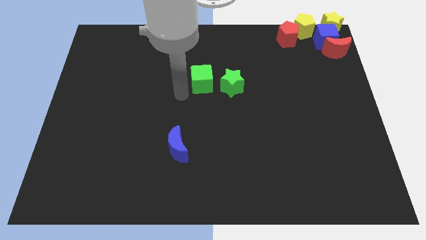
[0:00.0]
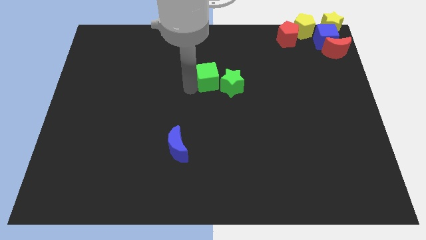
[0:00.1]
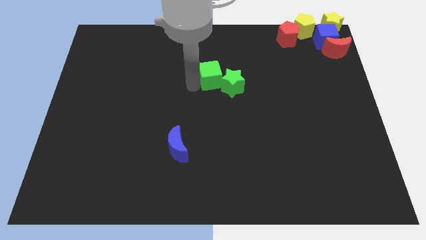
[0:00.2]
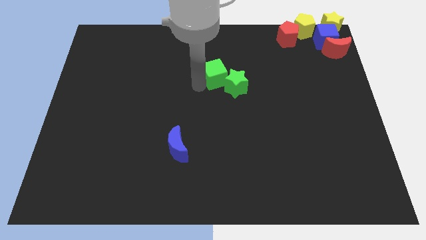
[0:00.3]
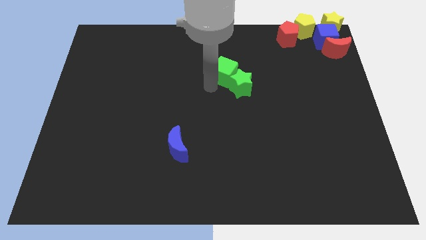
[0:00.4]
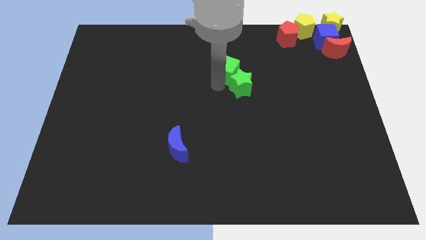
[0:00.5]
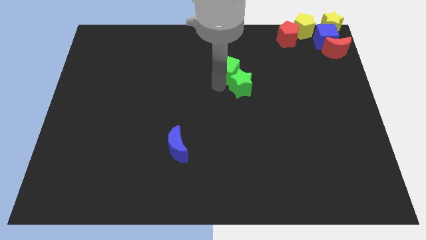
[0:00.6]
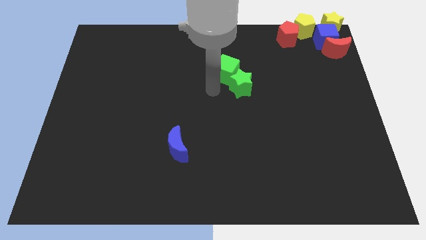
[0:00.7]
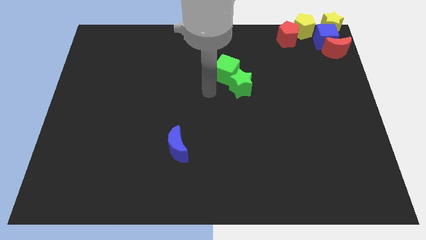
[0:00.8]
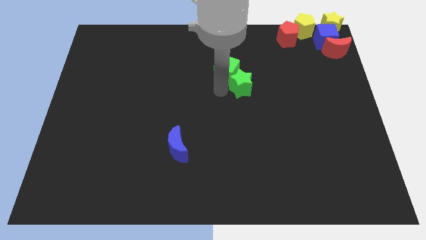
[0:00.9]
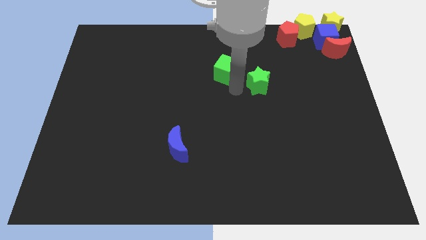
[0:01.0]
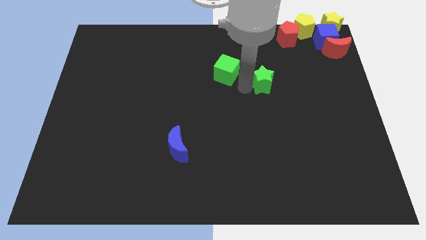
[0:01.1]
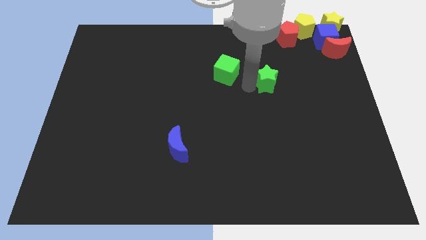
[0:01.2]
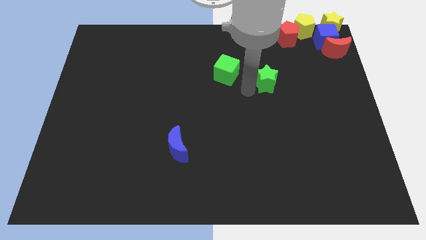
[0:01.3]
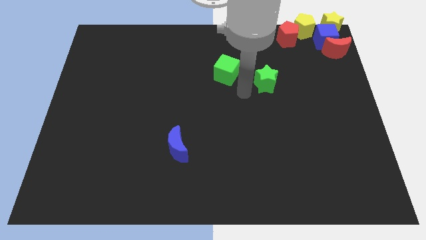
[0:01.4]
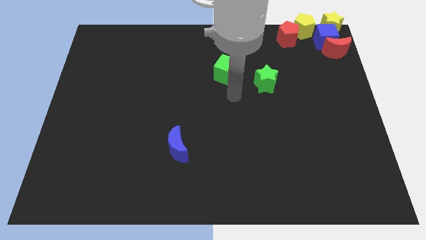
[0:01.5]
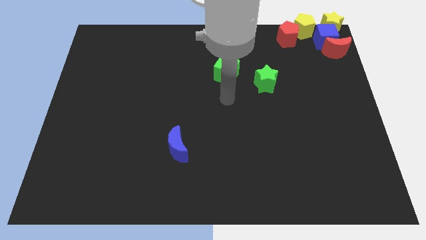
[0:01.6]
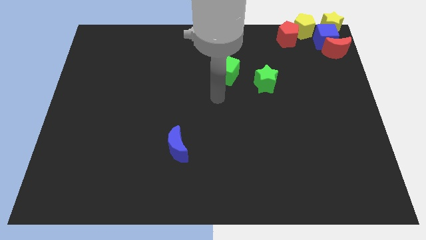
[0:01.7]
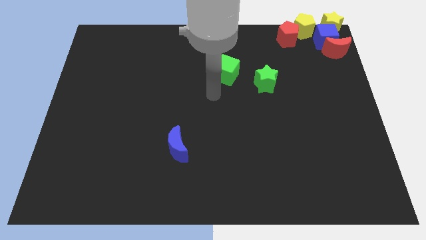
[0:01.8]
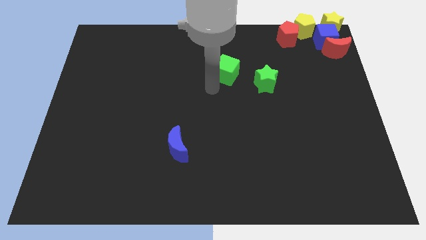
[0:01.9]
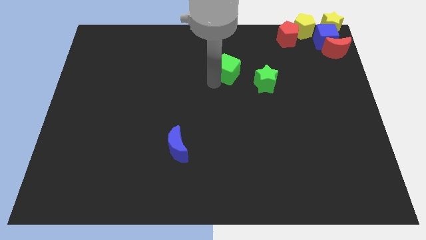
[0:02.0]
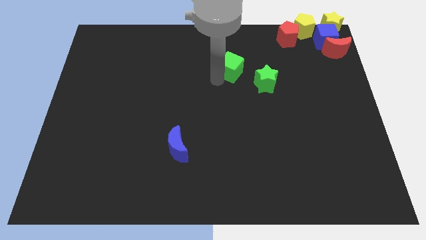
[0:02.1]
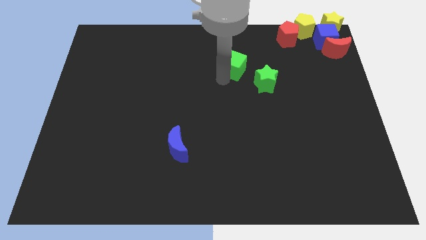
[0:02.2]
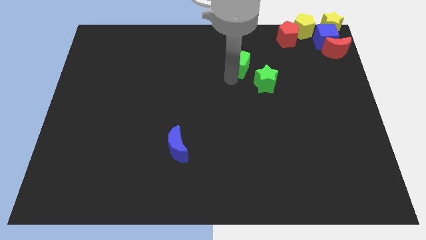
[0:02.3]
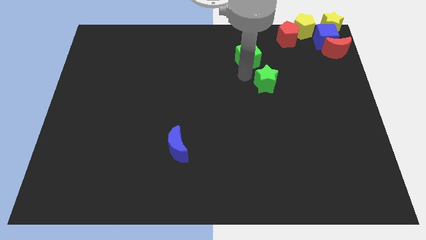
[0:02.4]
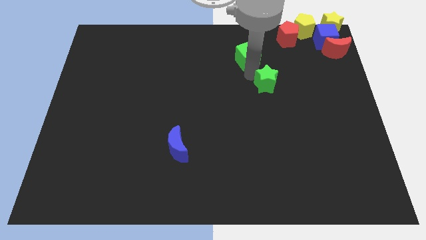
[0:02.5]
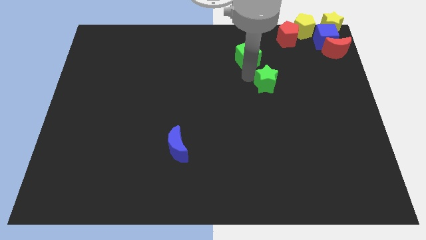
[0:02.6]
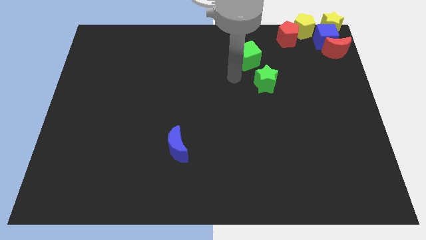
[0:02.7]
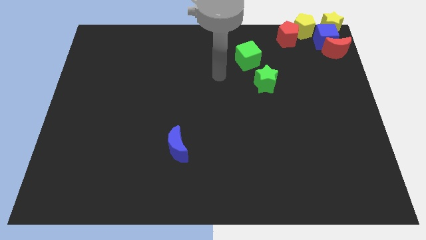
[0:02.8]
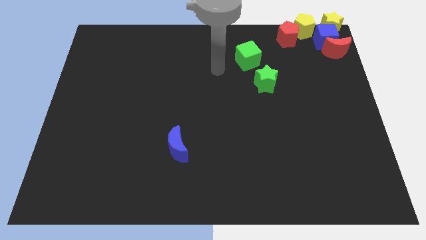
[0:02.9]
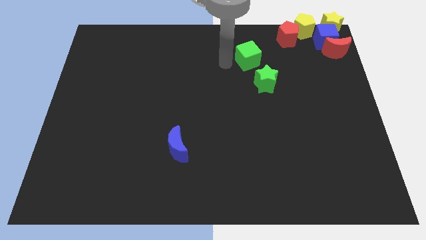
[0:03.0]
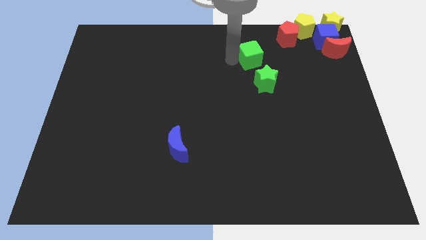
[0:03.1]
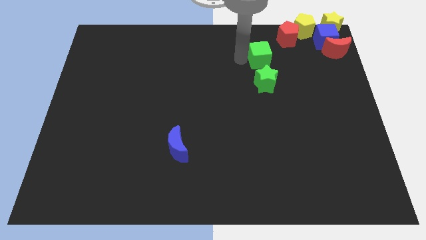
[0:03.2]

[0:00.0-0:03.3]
place the green cube above green star

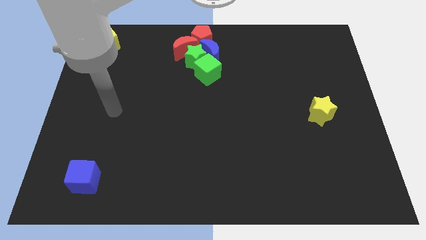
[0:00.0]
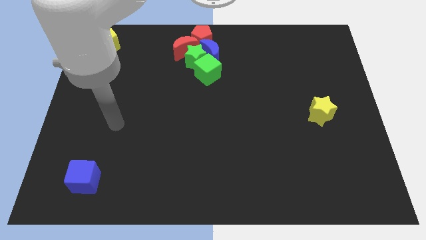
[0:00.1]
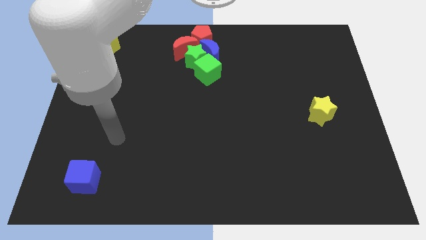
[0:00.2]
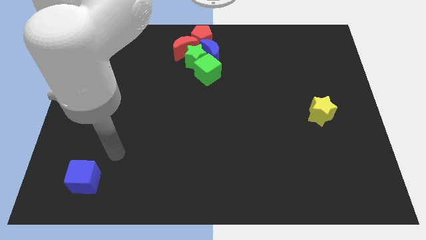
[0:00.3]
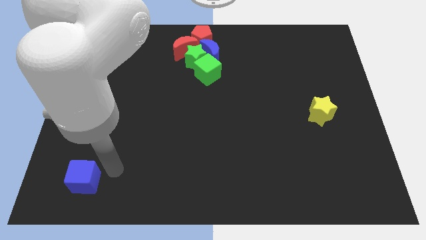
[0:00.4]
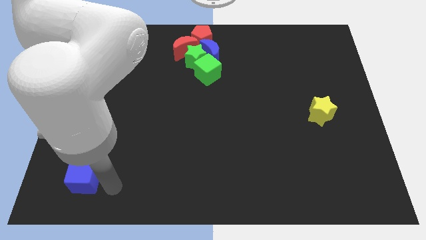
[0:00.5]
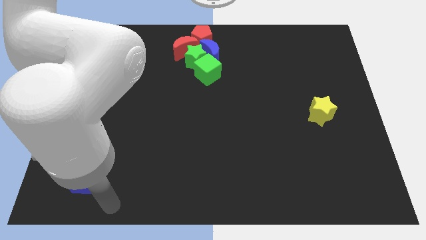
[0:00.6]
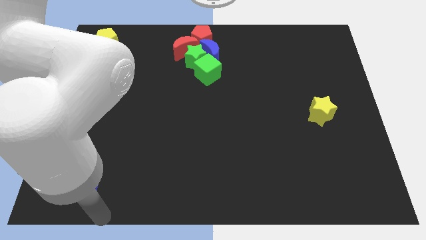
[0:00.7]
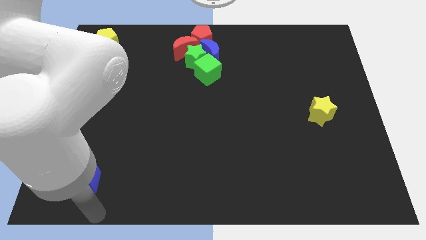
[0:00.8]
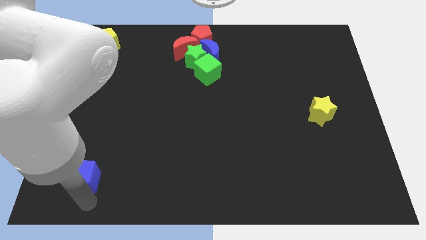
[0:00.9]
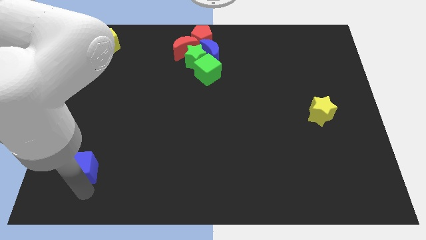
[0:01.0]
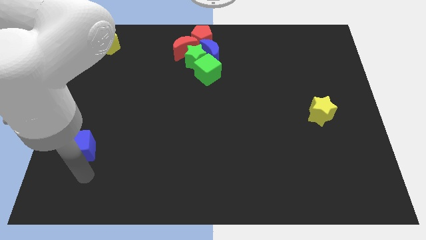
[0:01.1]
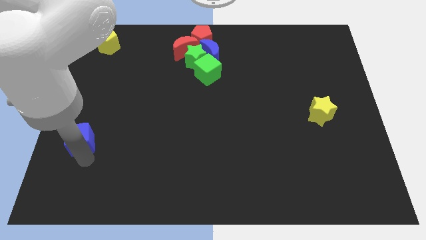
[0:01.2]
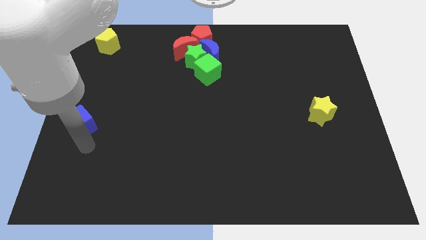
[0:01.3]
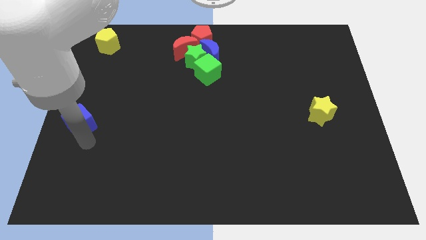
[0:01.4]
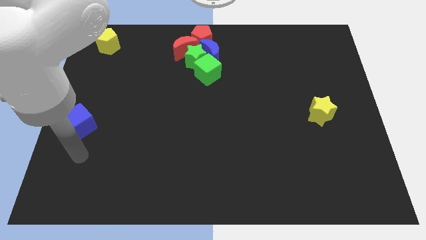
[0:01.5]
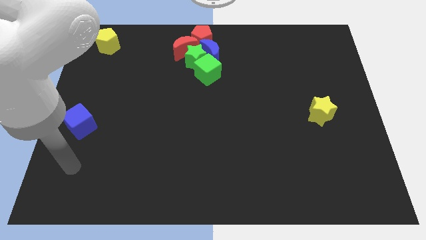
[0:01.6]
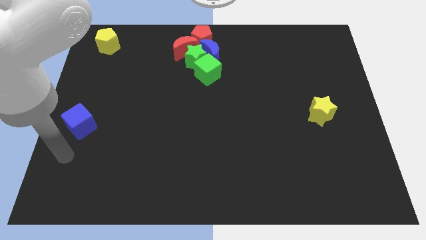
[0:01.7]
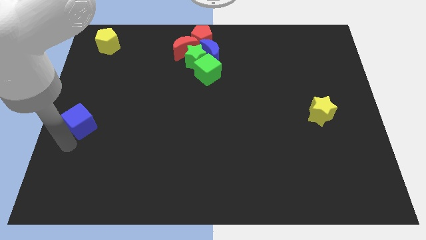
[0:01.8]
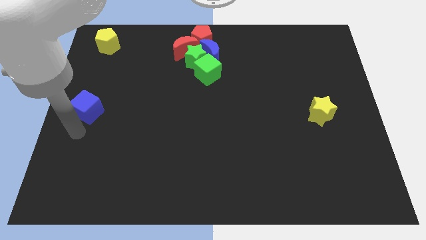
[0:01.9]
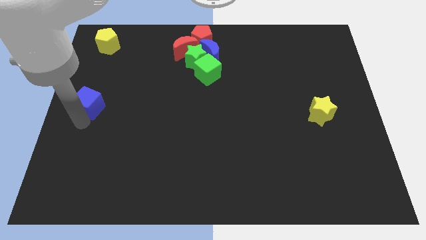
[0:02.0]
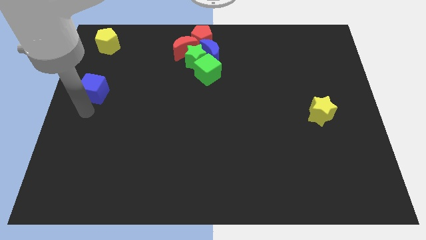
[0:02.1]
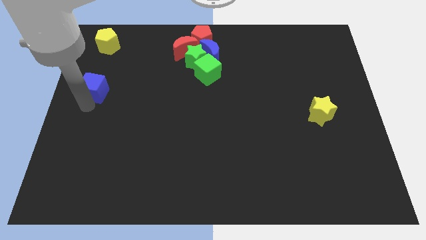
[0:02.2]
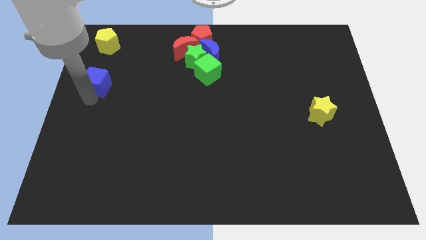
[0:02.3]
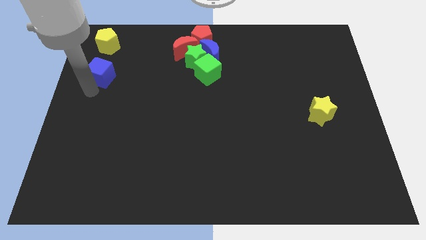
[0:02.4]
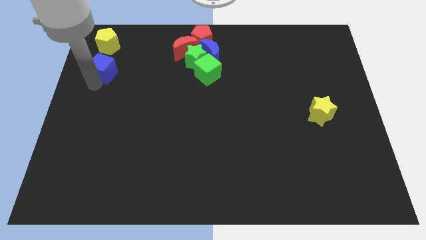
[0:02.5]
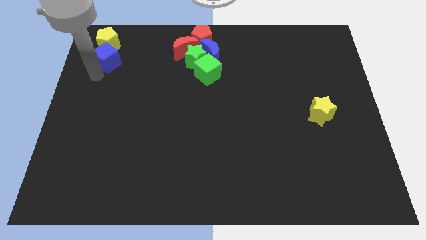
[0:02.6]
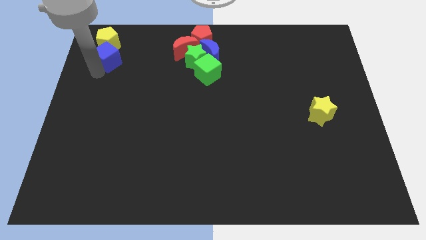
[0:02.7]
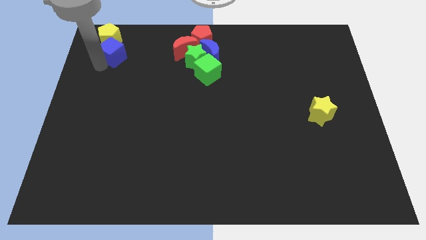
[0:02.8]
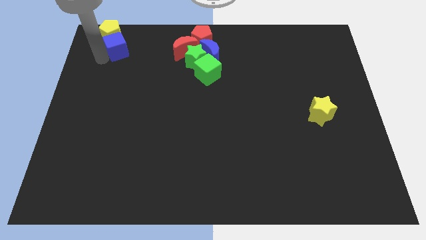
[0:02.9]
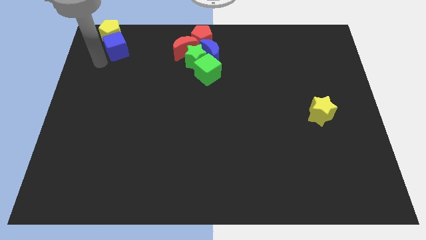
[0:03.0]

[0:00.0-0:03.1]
add blue cube into yellow pentagon

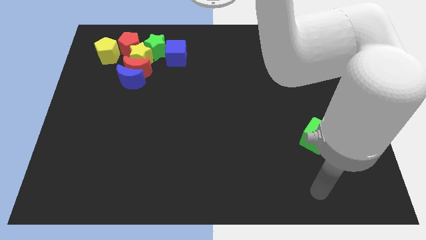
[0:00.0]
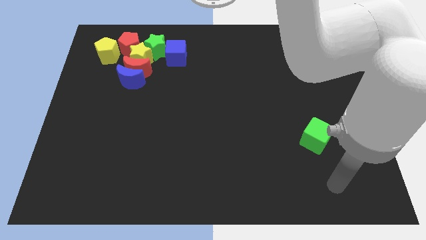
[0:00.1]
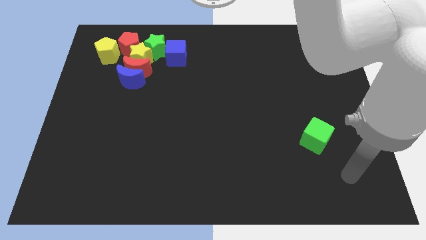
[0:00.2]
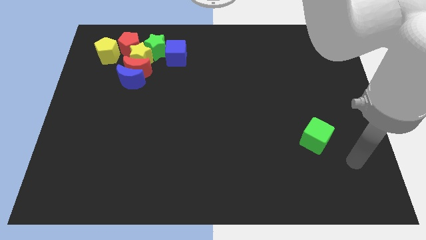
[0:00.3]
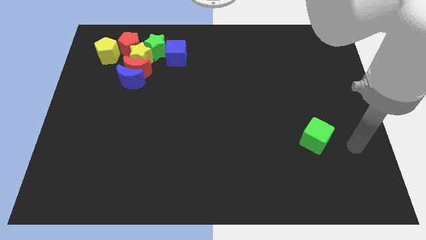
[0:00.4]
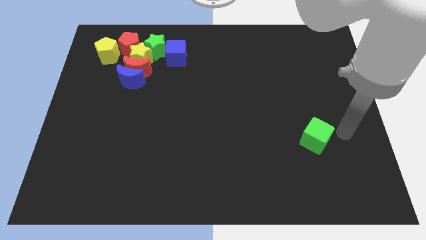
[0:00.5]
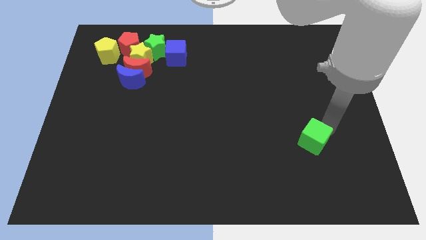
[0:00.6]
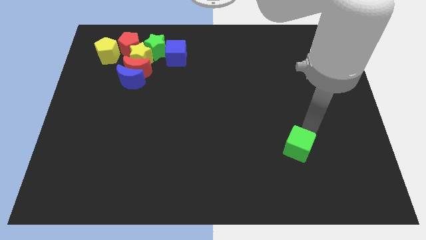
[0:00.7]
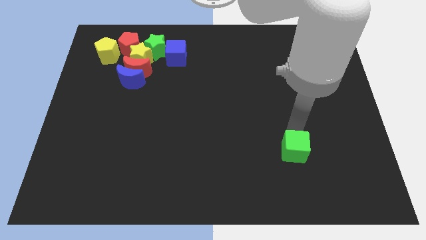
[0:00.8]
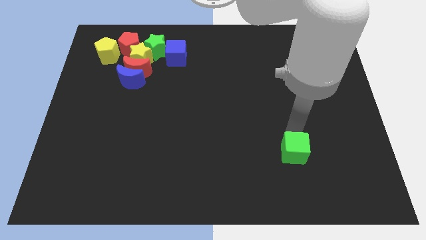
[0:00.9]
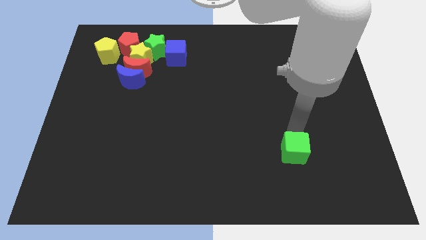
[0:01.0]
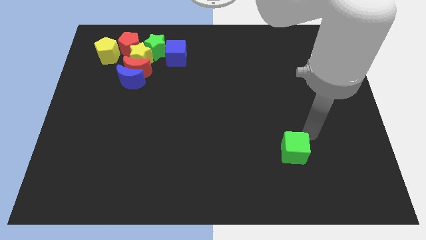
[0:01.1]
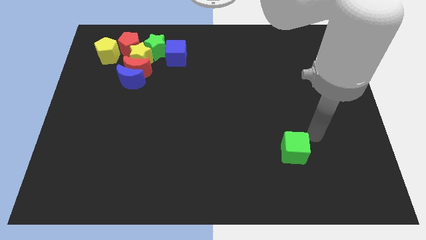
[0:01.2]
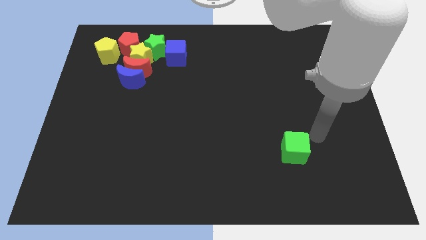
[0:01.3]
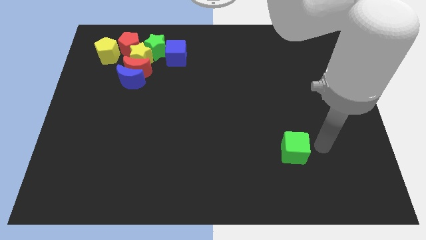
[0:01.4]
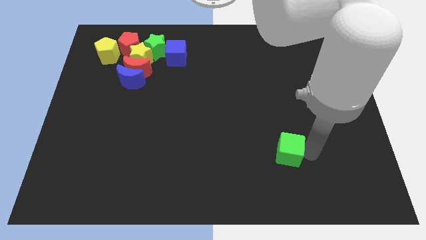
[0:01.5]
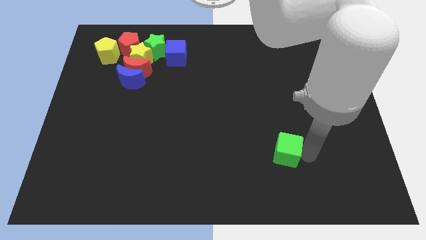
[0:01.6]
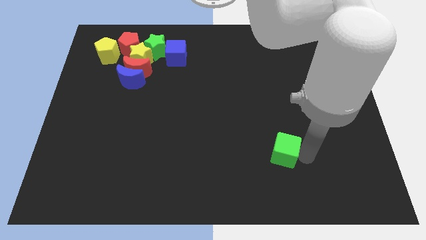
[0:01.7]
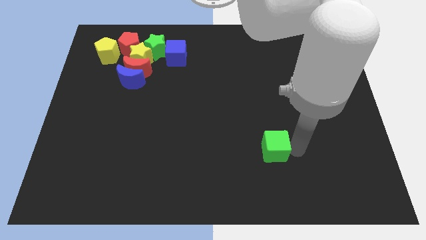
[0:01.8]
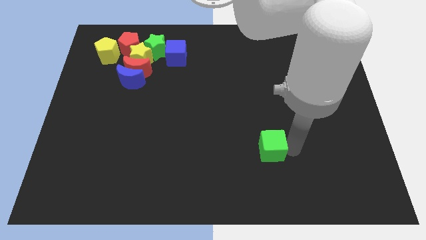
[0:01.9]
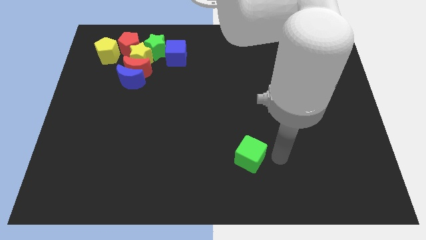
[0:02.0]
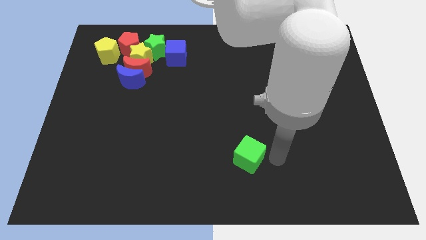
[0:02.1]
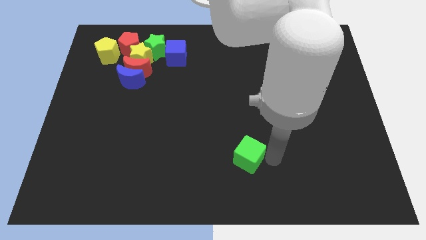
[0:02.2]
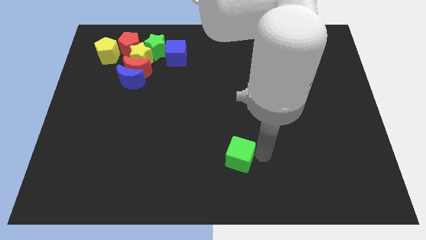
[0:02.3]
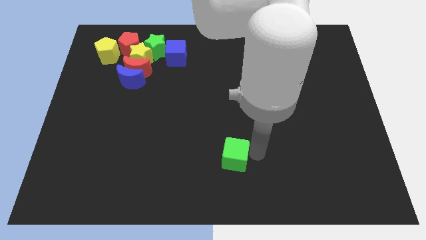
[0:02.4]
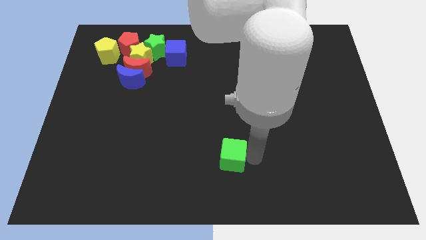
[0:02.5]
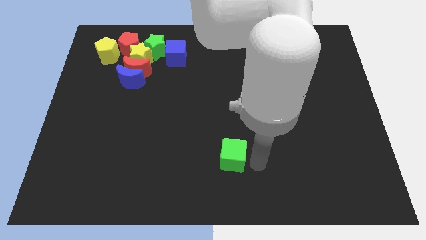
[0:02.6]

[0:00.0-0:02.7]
move the green cube towards the bottom center of the board
